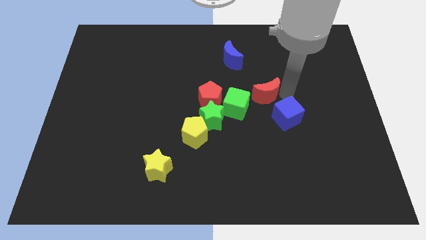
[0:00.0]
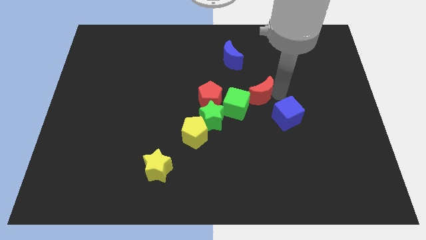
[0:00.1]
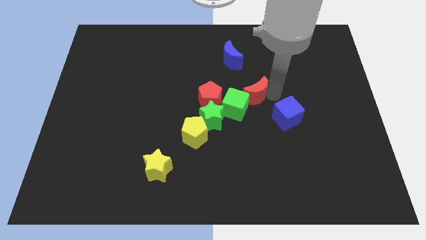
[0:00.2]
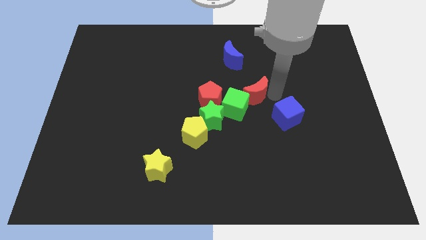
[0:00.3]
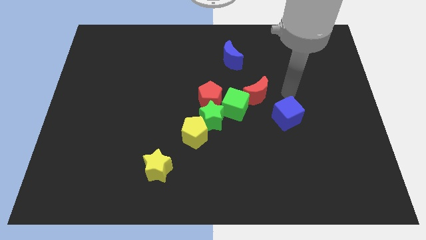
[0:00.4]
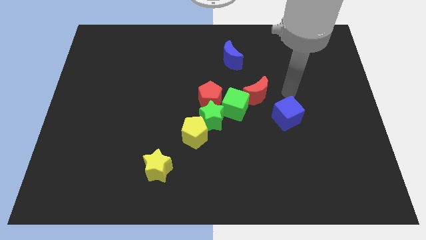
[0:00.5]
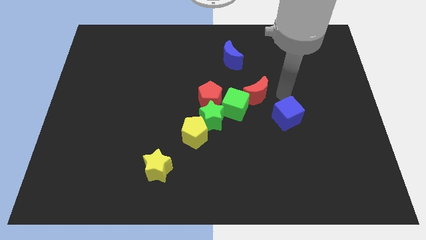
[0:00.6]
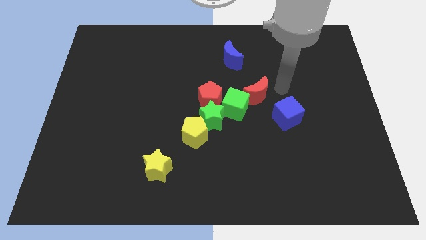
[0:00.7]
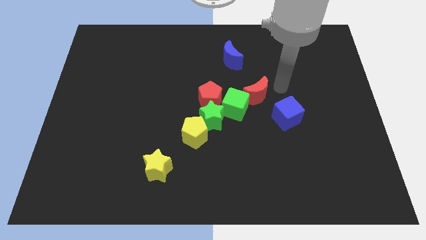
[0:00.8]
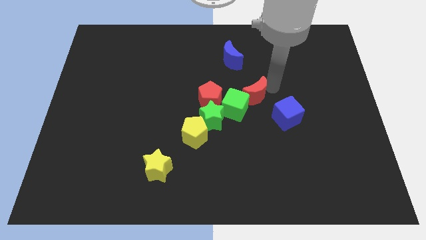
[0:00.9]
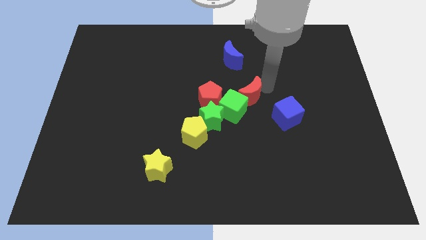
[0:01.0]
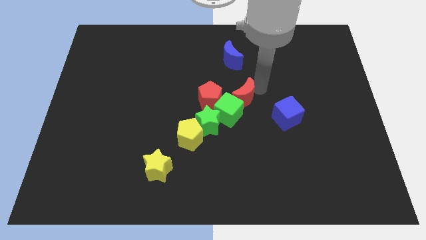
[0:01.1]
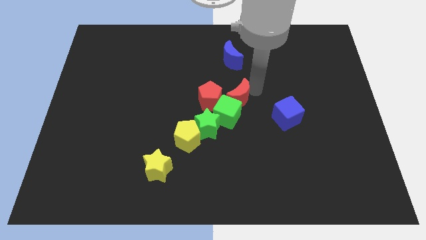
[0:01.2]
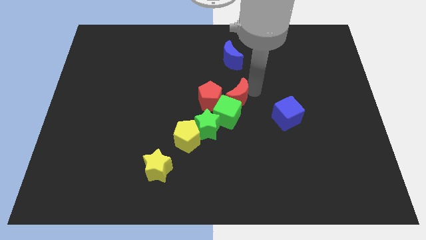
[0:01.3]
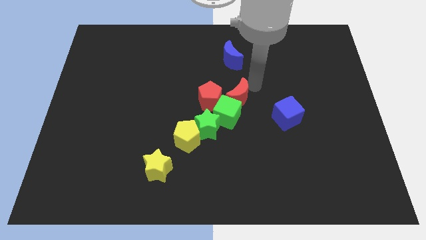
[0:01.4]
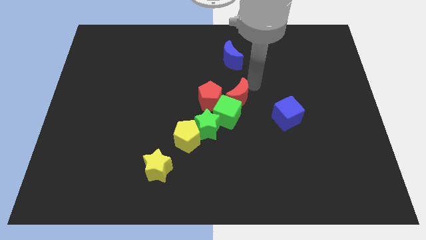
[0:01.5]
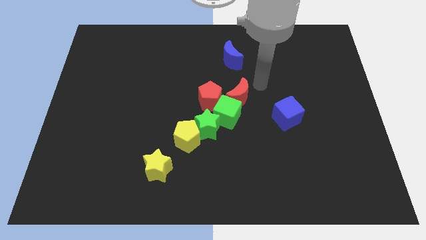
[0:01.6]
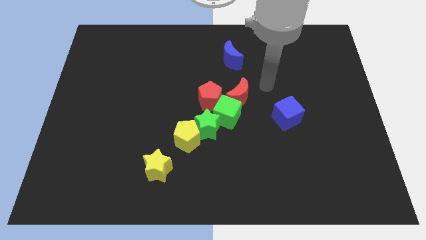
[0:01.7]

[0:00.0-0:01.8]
push the red moon in to the green cube

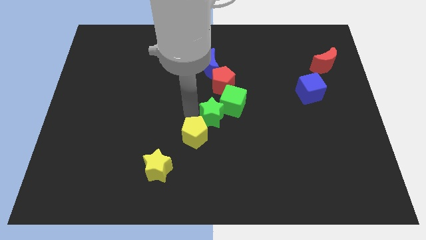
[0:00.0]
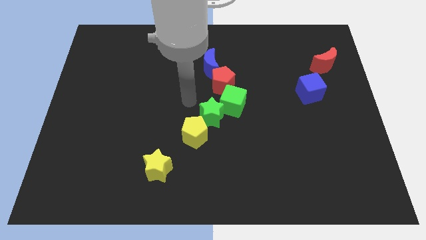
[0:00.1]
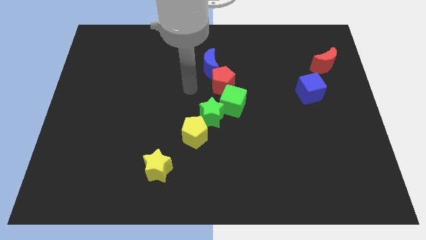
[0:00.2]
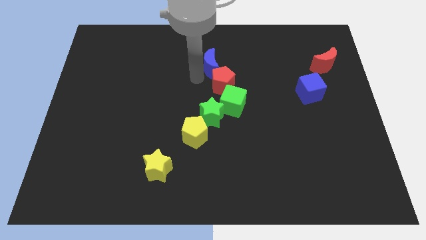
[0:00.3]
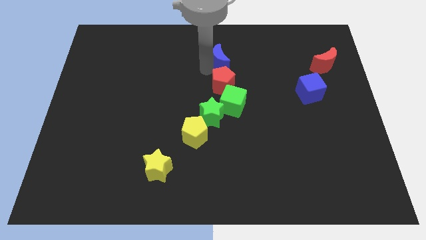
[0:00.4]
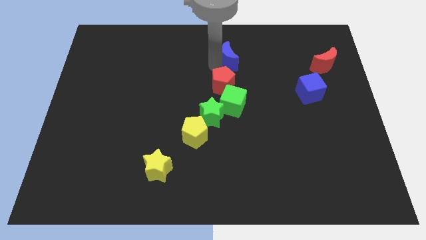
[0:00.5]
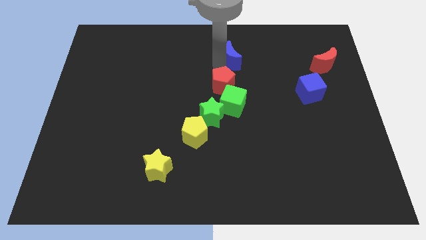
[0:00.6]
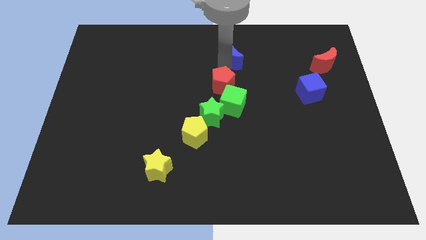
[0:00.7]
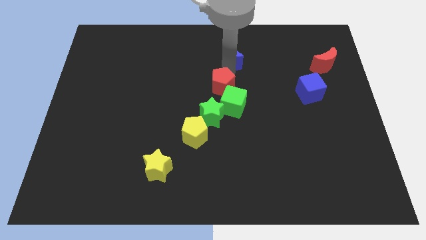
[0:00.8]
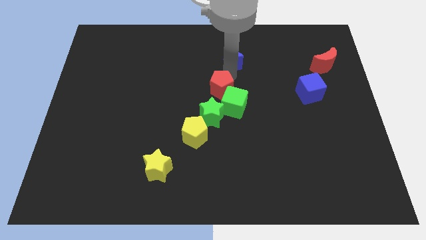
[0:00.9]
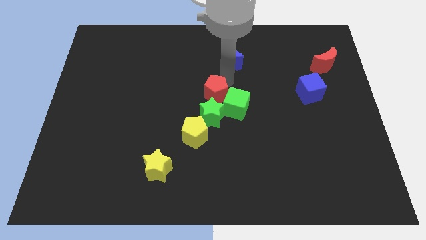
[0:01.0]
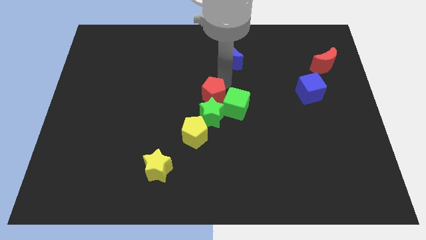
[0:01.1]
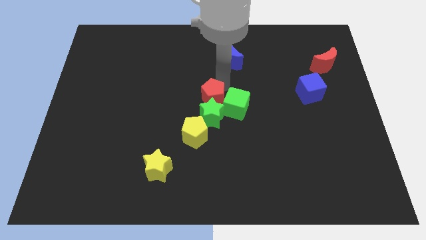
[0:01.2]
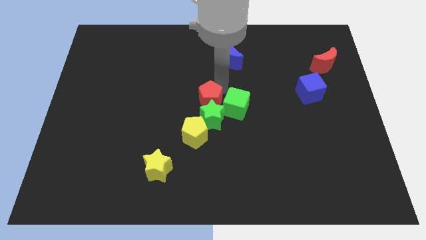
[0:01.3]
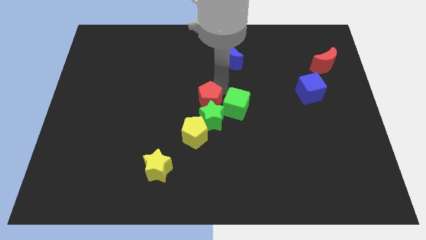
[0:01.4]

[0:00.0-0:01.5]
separate the red pentagon from blue moon

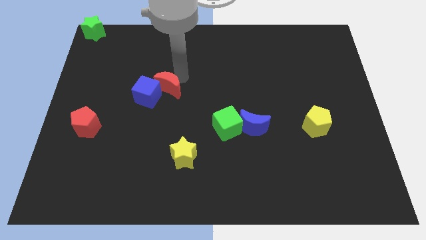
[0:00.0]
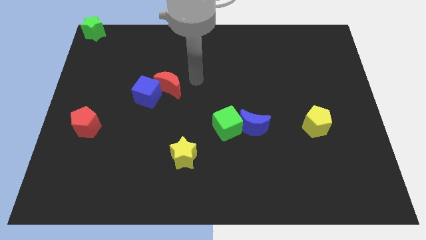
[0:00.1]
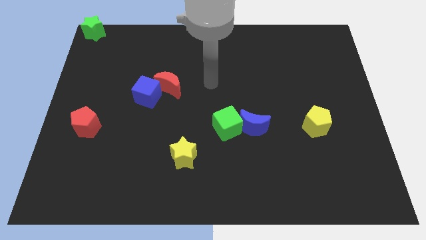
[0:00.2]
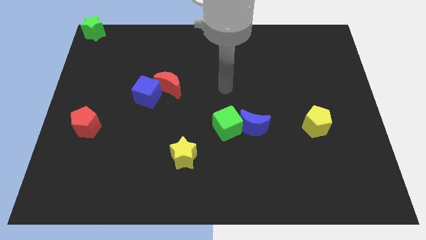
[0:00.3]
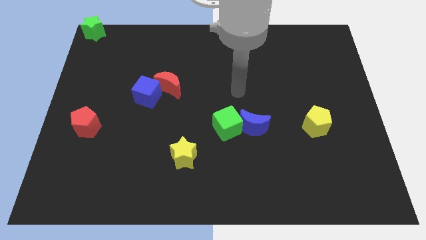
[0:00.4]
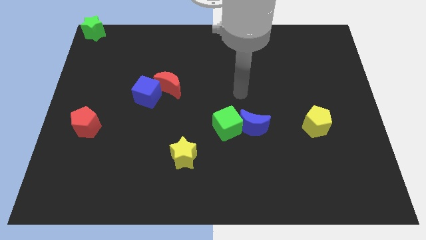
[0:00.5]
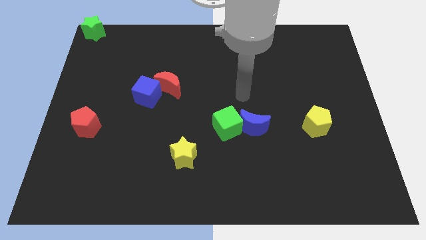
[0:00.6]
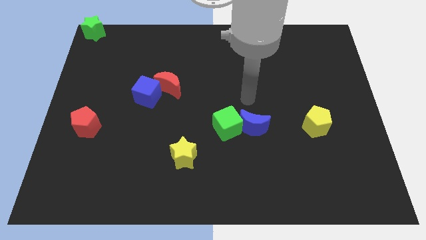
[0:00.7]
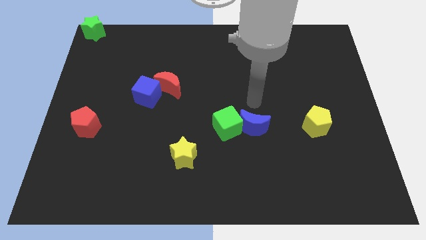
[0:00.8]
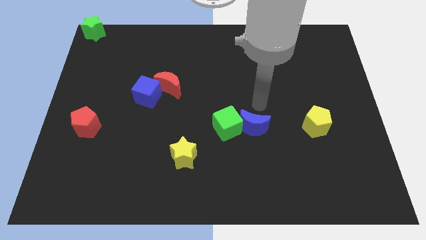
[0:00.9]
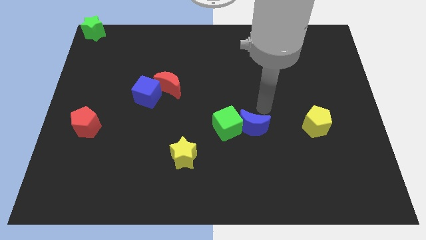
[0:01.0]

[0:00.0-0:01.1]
place the arm above the blue moon

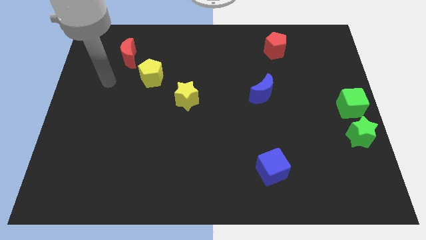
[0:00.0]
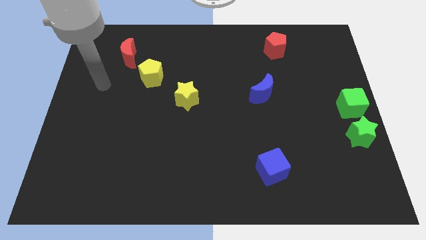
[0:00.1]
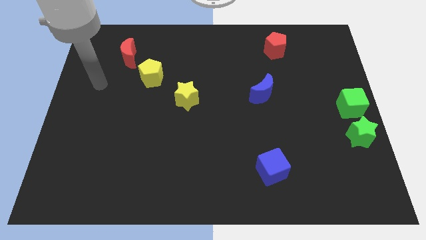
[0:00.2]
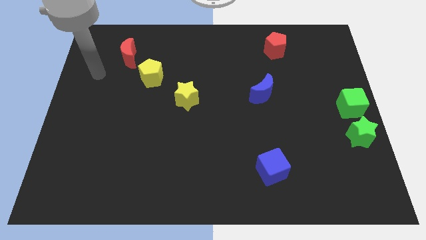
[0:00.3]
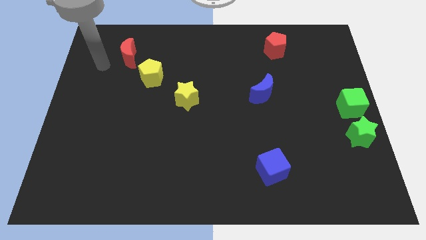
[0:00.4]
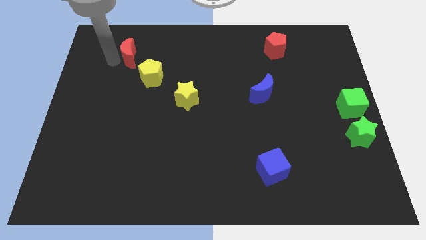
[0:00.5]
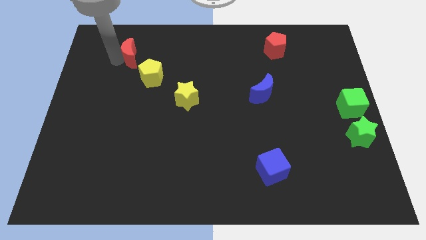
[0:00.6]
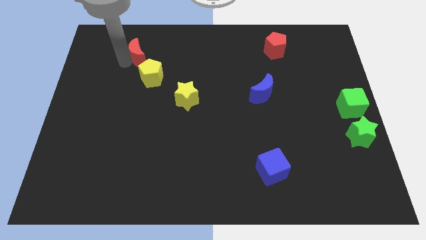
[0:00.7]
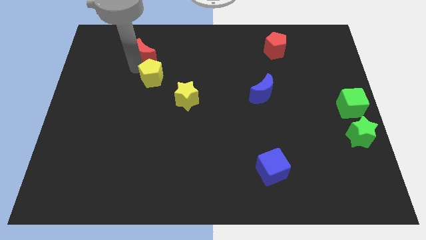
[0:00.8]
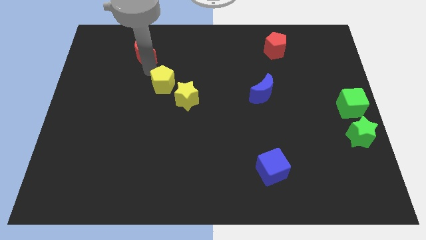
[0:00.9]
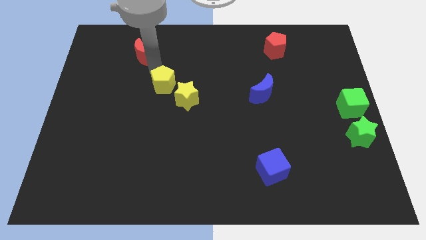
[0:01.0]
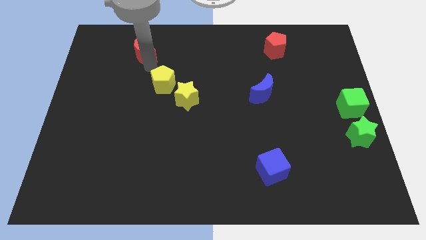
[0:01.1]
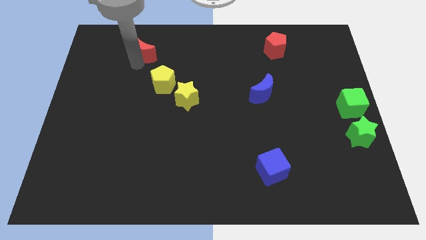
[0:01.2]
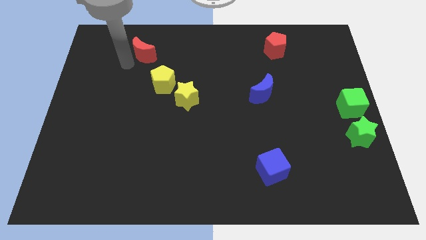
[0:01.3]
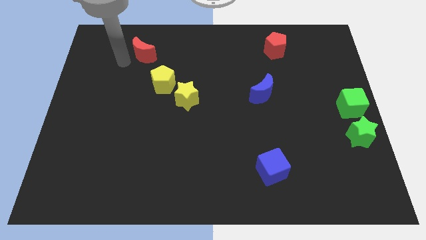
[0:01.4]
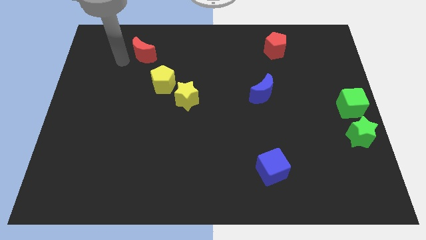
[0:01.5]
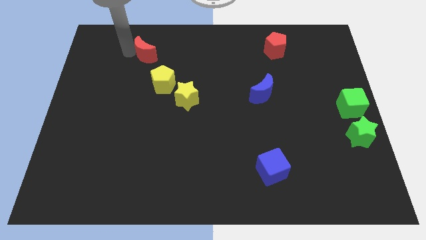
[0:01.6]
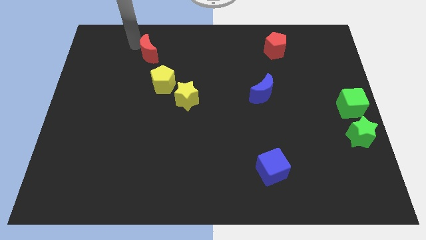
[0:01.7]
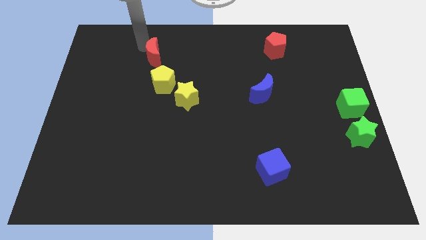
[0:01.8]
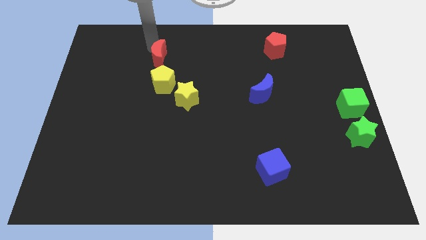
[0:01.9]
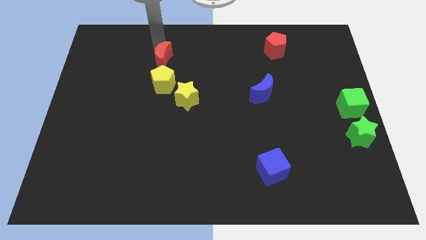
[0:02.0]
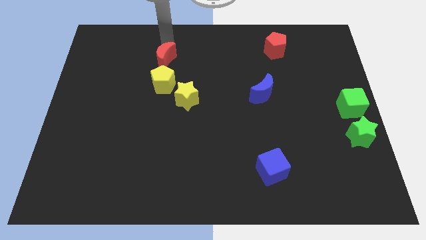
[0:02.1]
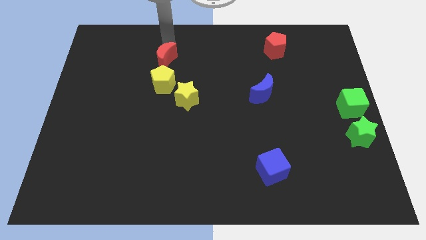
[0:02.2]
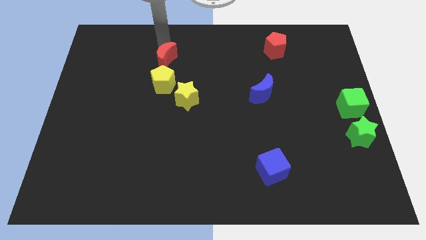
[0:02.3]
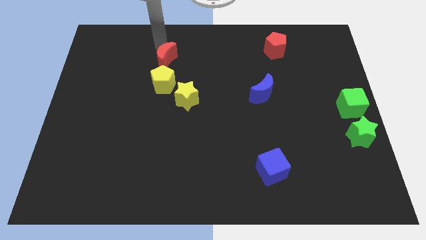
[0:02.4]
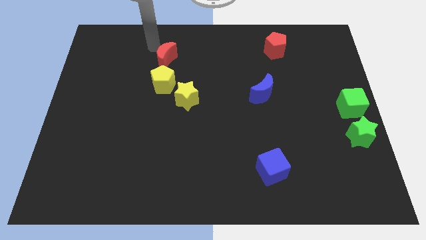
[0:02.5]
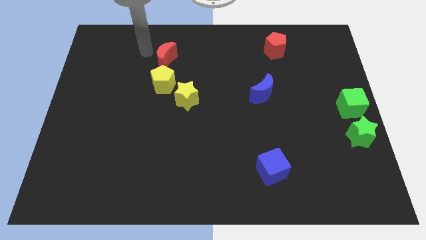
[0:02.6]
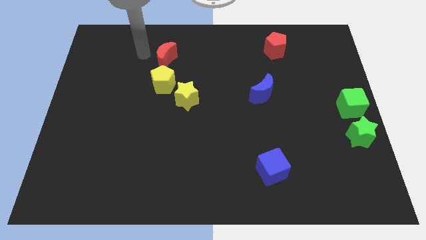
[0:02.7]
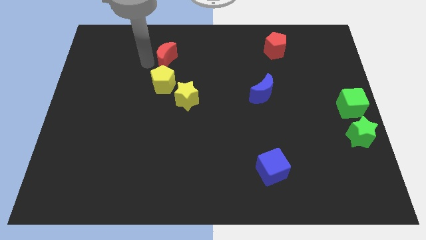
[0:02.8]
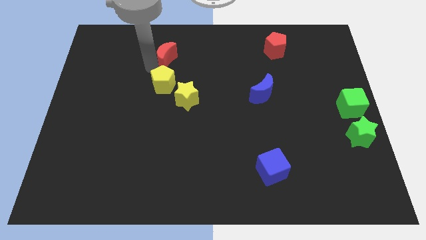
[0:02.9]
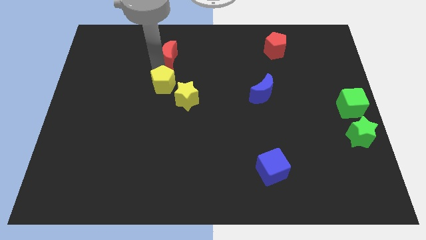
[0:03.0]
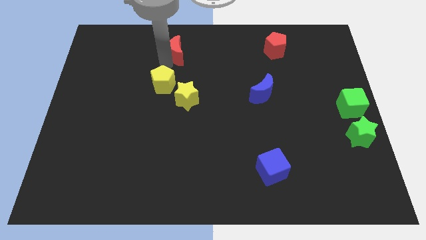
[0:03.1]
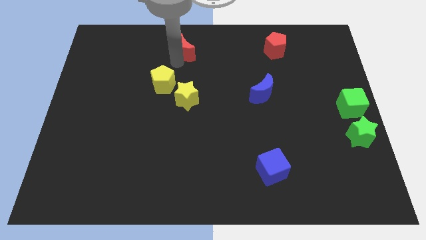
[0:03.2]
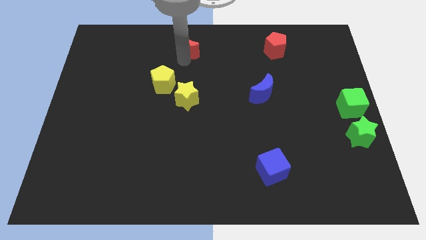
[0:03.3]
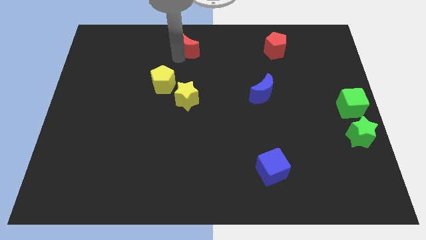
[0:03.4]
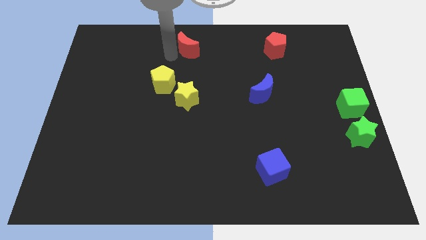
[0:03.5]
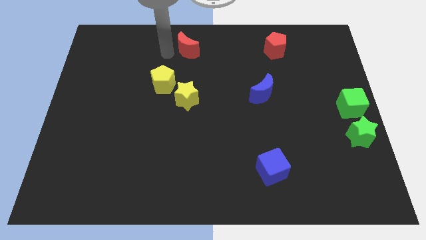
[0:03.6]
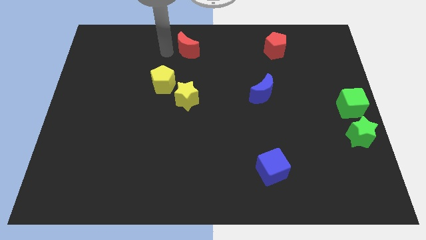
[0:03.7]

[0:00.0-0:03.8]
put red moon above yellow star

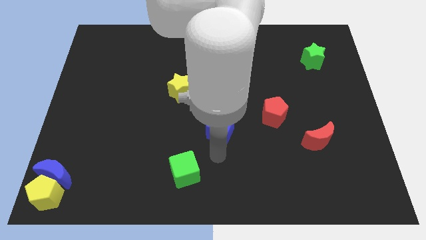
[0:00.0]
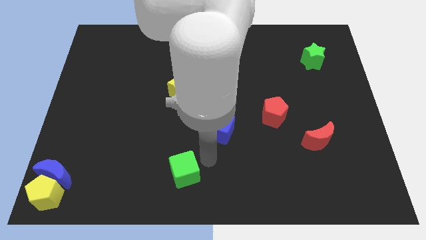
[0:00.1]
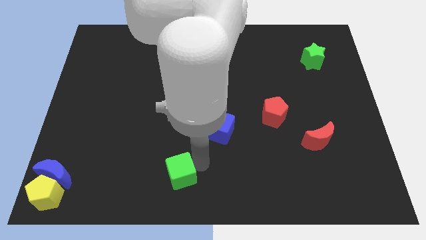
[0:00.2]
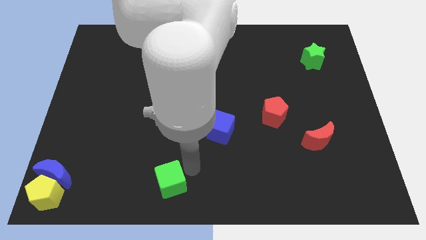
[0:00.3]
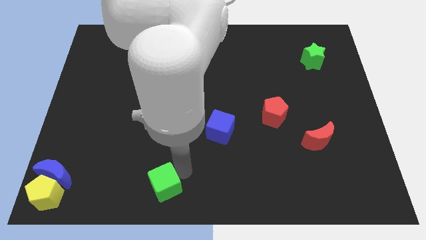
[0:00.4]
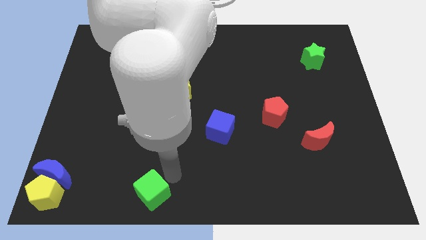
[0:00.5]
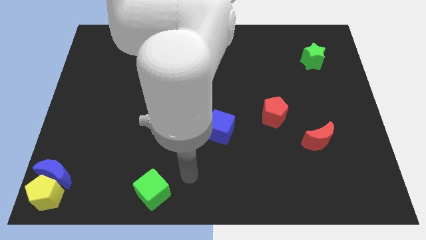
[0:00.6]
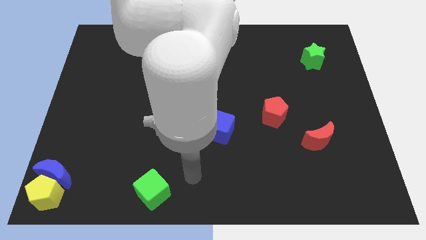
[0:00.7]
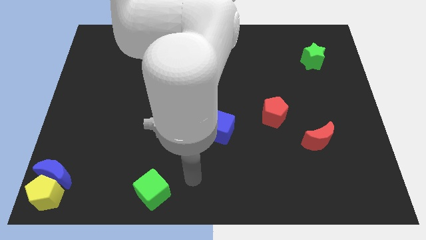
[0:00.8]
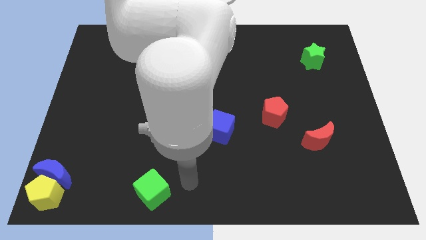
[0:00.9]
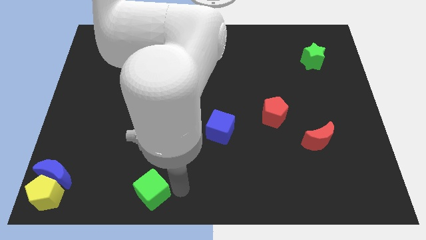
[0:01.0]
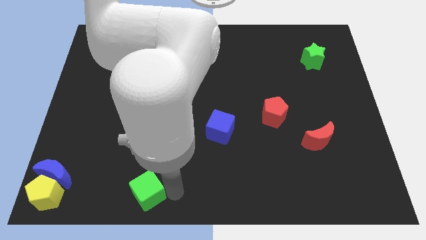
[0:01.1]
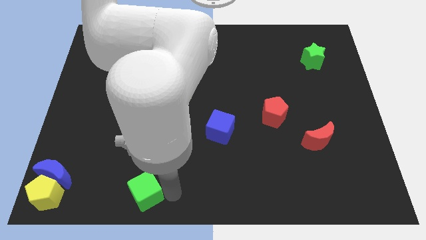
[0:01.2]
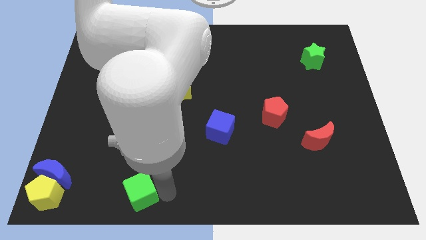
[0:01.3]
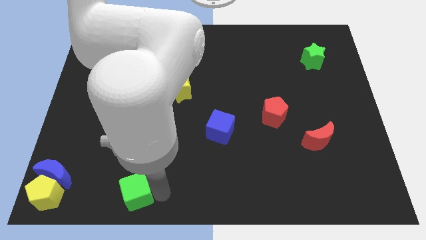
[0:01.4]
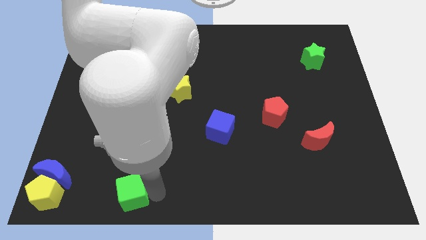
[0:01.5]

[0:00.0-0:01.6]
place green cube to the right of yellow pentagon
